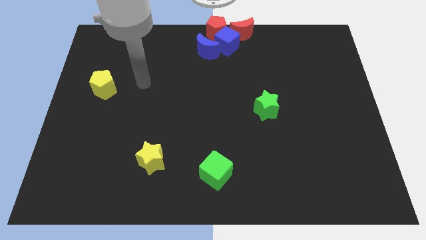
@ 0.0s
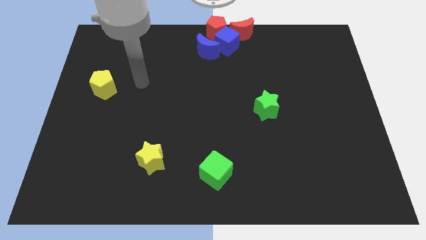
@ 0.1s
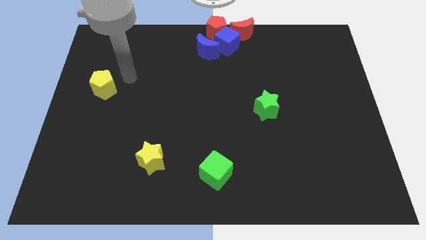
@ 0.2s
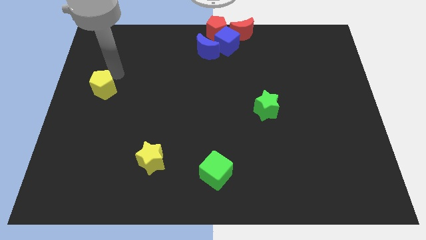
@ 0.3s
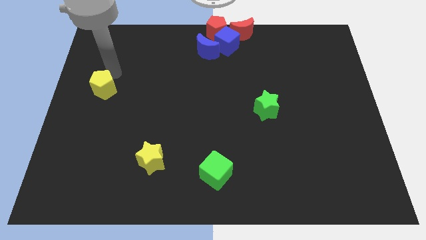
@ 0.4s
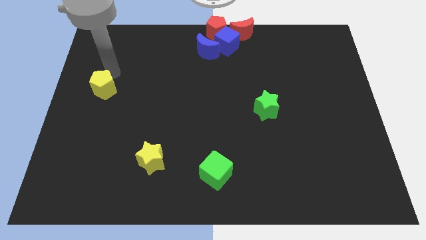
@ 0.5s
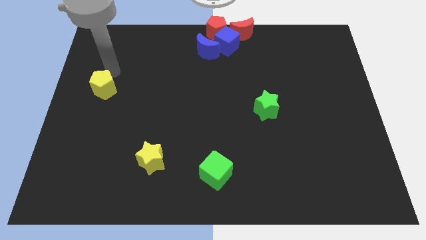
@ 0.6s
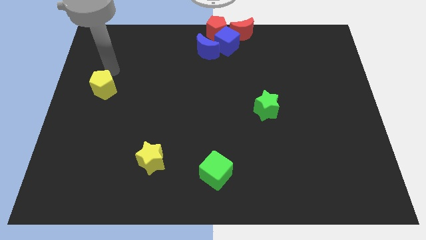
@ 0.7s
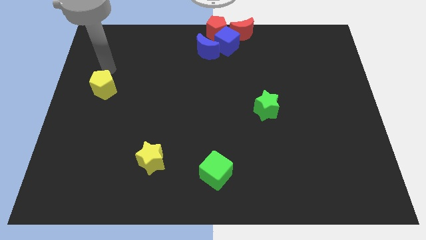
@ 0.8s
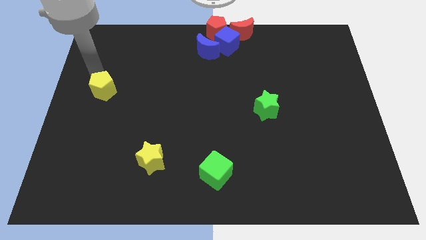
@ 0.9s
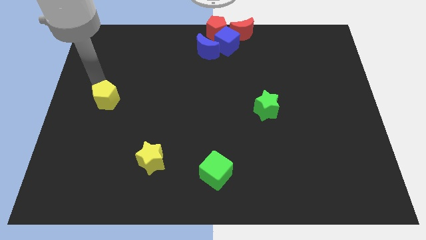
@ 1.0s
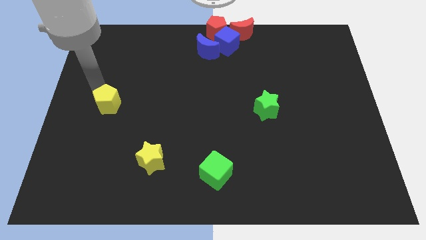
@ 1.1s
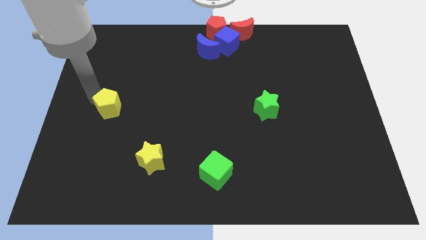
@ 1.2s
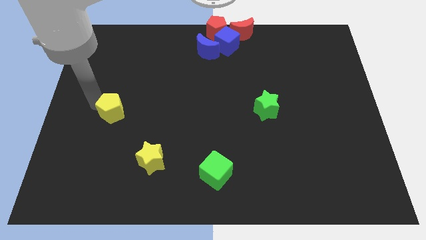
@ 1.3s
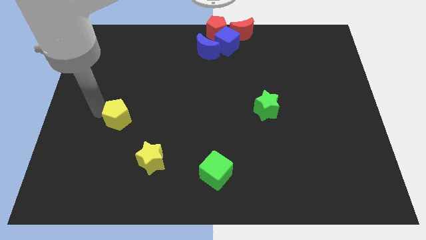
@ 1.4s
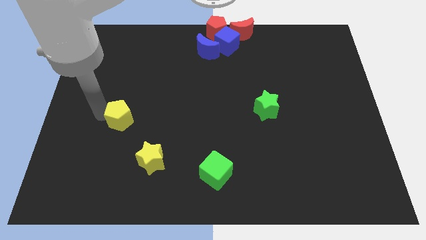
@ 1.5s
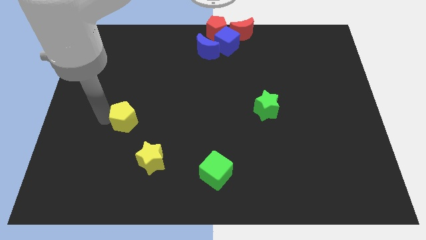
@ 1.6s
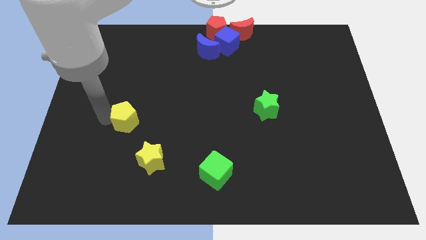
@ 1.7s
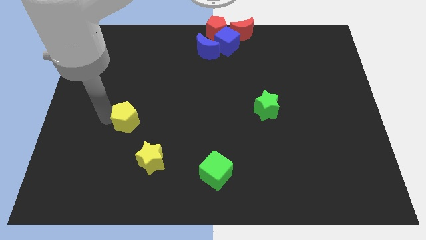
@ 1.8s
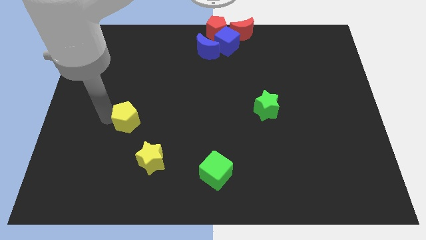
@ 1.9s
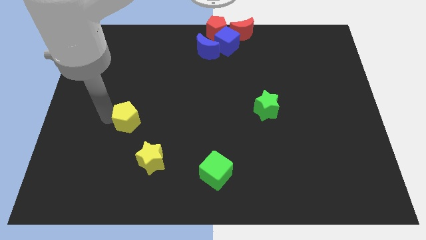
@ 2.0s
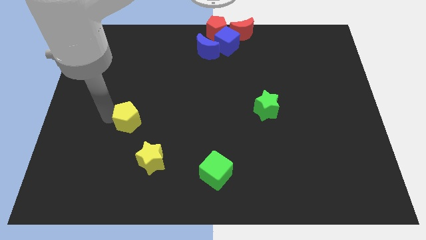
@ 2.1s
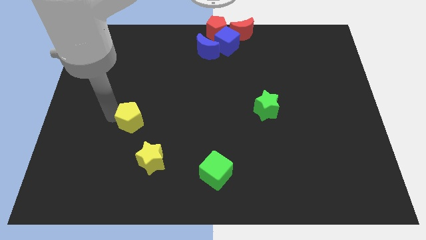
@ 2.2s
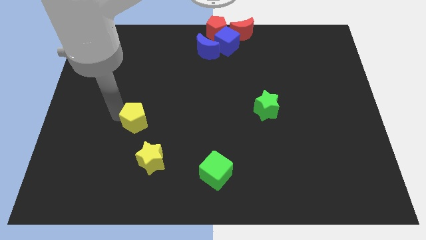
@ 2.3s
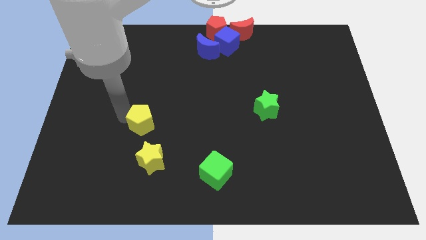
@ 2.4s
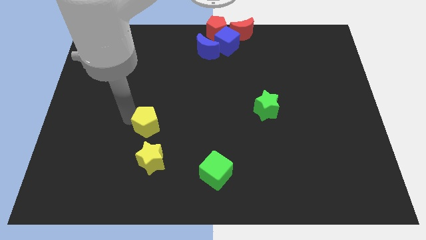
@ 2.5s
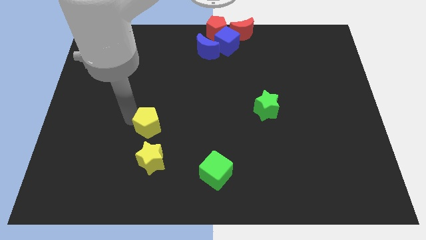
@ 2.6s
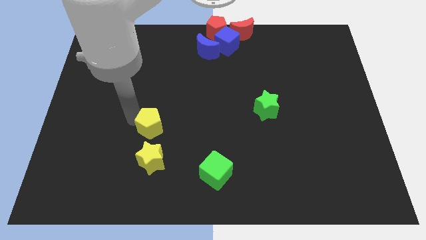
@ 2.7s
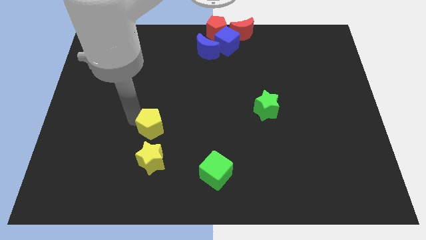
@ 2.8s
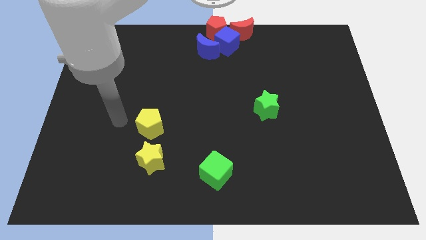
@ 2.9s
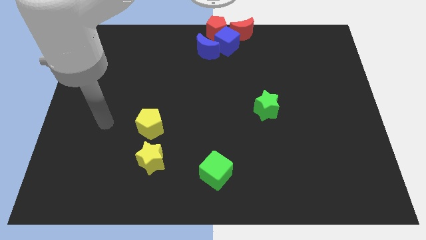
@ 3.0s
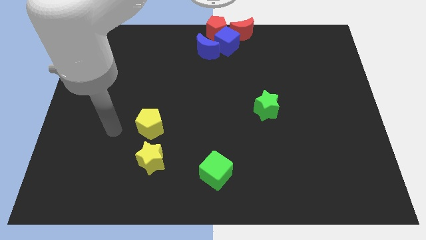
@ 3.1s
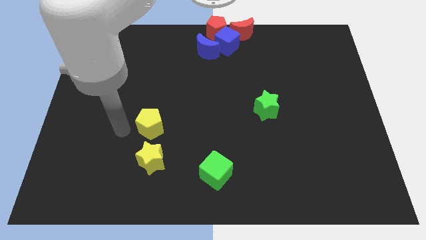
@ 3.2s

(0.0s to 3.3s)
place the yellow pentagon above the yellow star

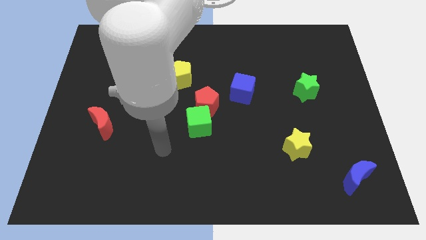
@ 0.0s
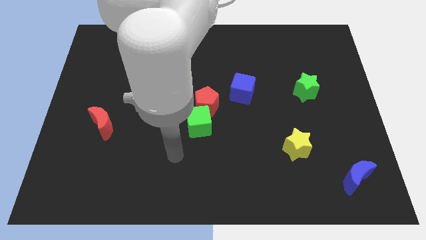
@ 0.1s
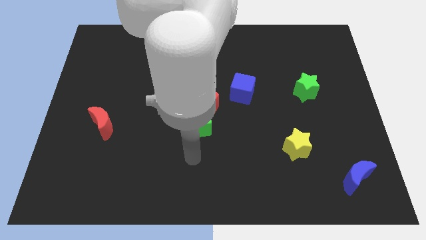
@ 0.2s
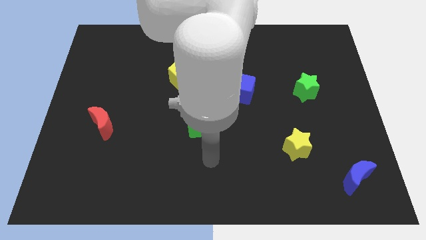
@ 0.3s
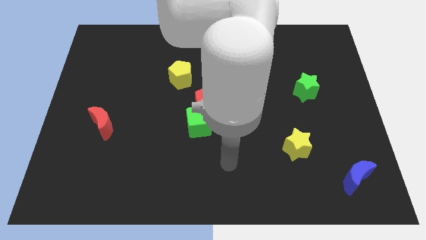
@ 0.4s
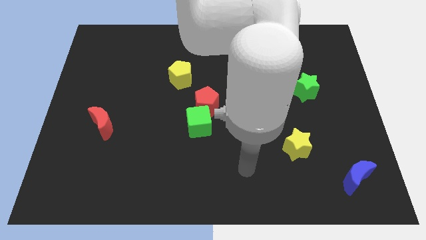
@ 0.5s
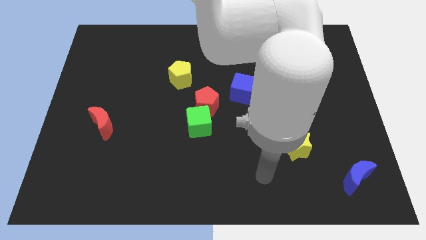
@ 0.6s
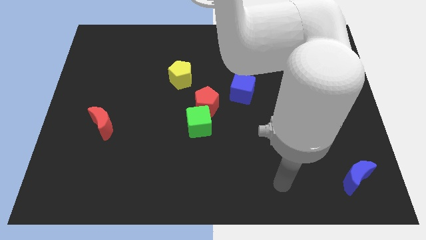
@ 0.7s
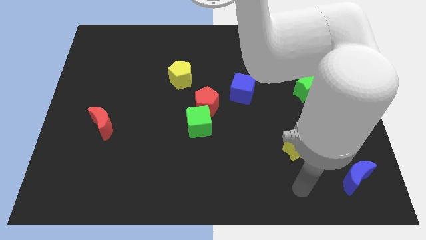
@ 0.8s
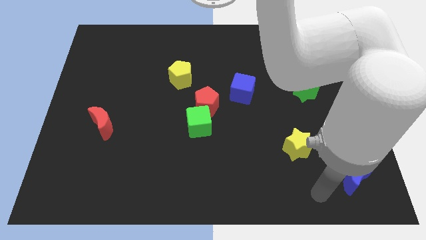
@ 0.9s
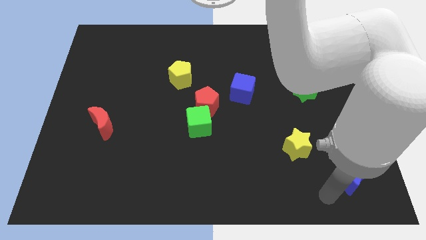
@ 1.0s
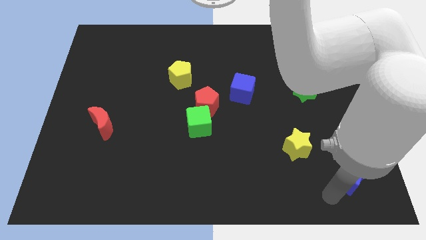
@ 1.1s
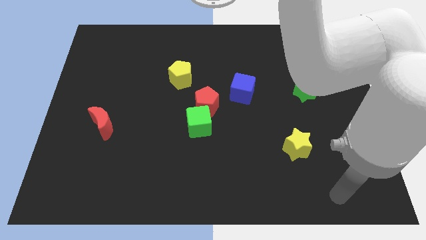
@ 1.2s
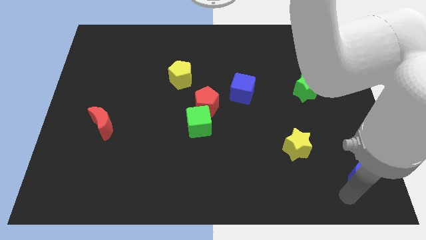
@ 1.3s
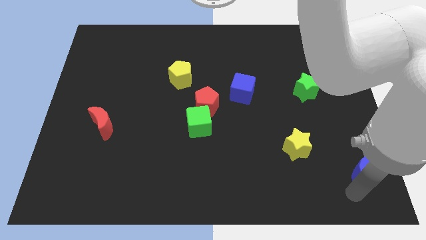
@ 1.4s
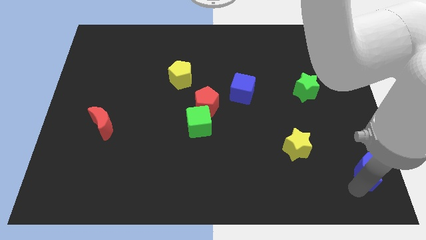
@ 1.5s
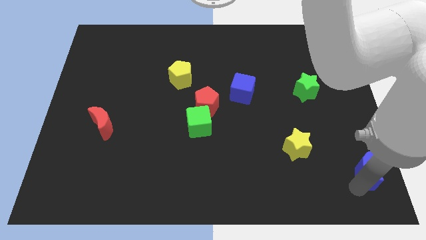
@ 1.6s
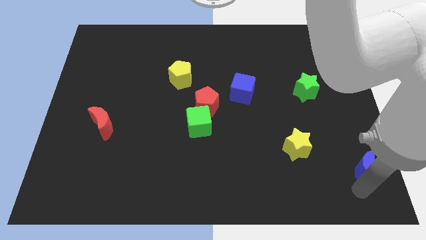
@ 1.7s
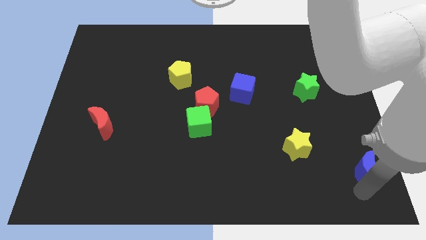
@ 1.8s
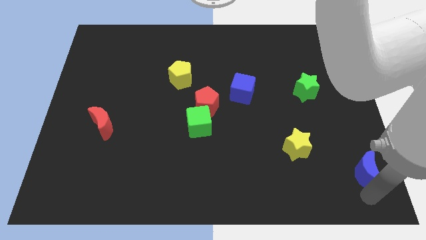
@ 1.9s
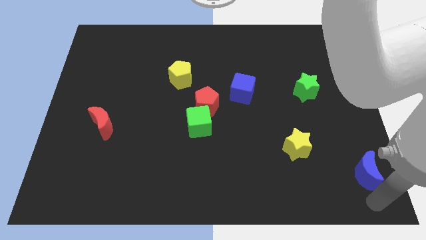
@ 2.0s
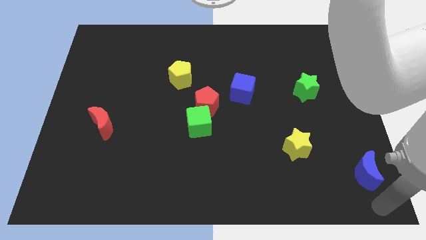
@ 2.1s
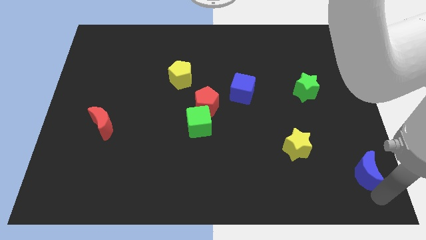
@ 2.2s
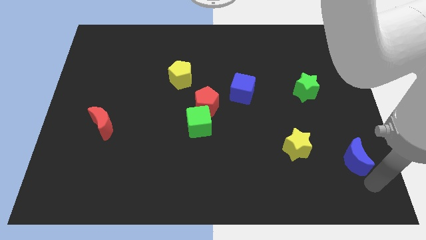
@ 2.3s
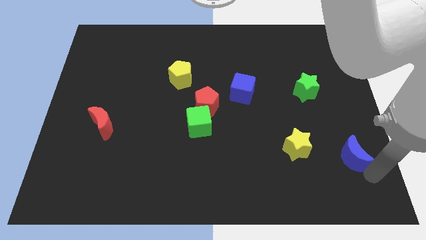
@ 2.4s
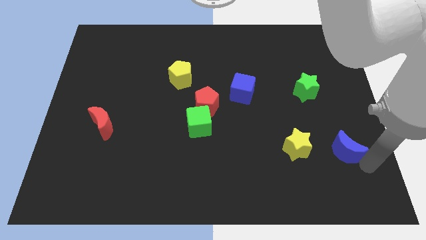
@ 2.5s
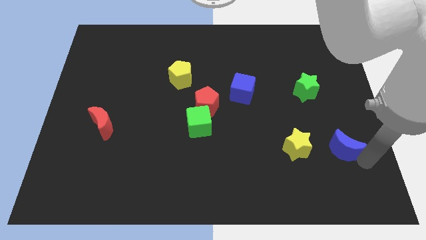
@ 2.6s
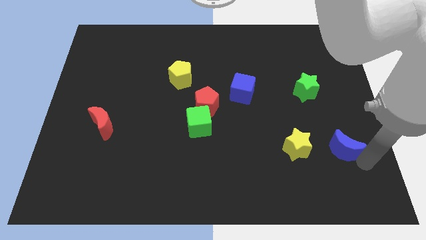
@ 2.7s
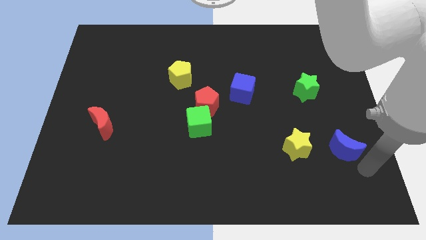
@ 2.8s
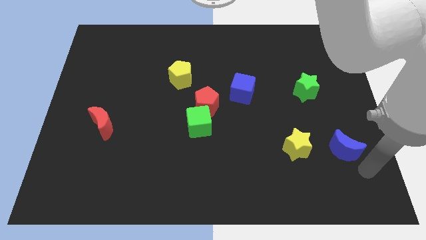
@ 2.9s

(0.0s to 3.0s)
put the blue moon at the right side of the yellow star

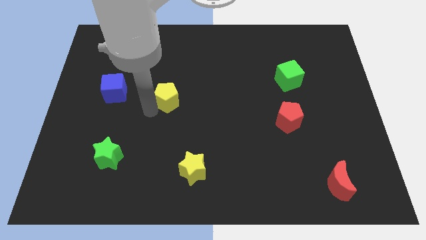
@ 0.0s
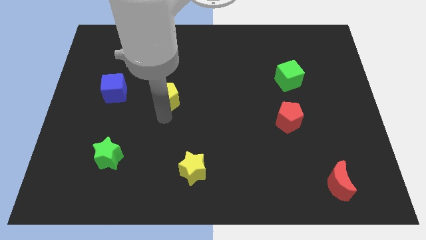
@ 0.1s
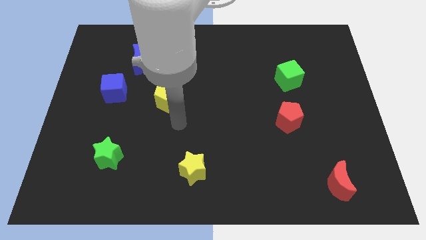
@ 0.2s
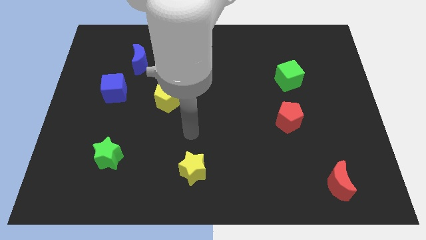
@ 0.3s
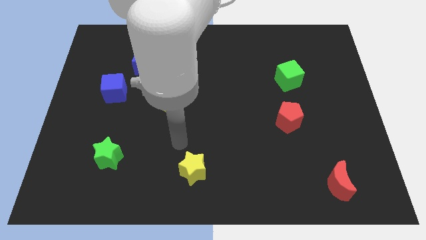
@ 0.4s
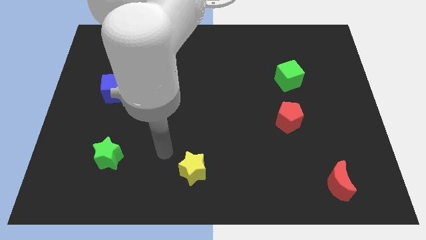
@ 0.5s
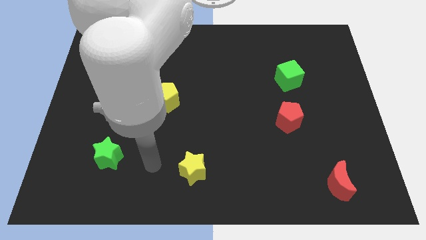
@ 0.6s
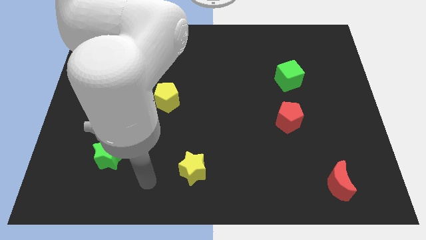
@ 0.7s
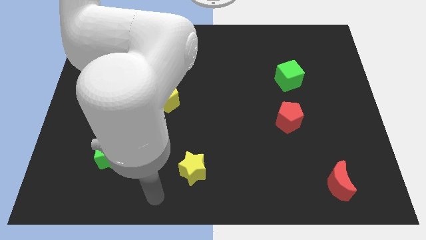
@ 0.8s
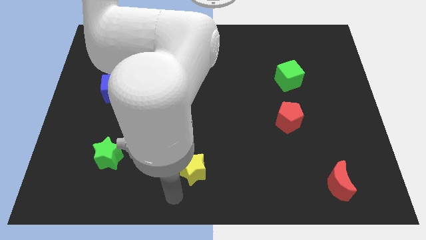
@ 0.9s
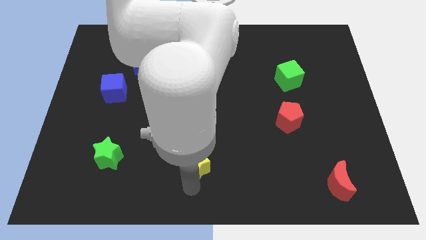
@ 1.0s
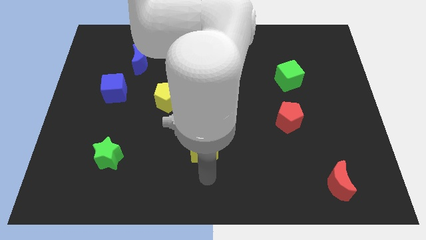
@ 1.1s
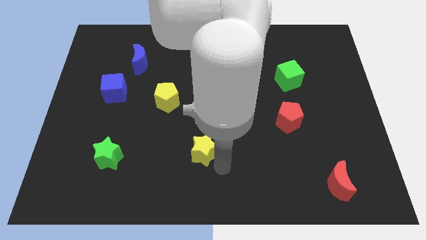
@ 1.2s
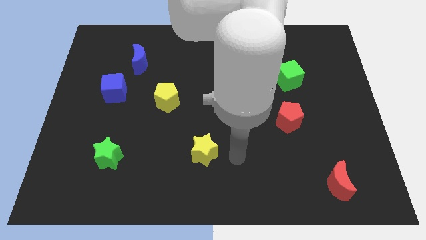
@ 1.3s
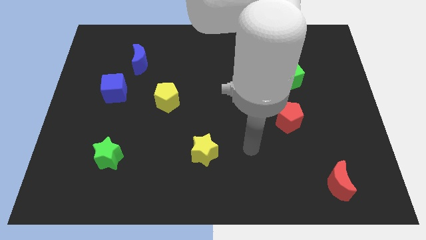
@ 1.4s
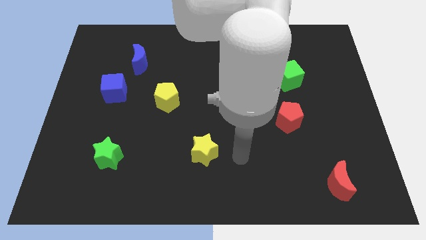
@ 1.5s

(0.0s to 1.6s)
slightly push the yellow star to the right of green star

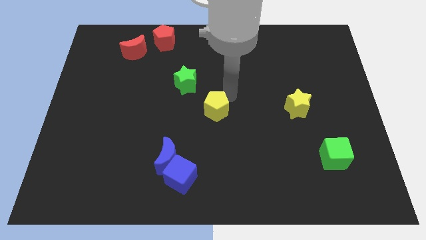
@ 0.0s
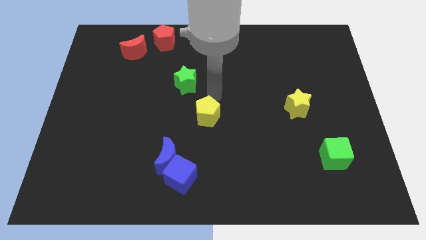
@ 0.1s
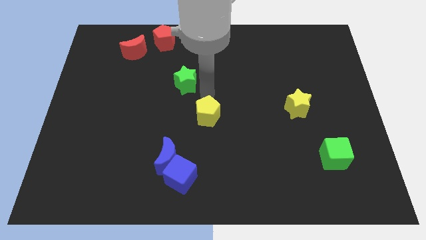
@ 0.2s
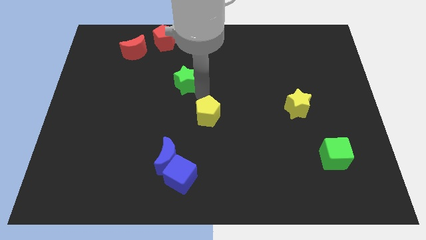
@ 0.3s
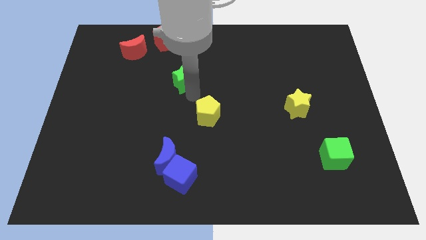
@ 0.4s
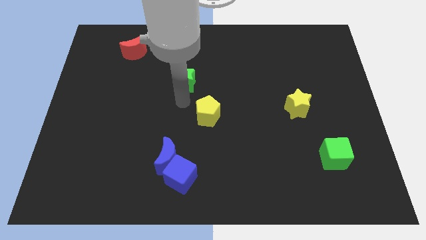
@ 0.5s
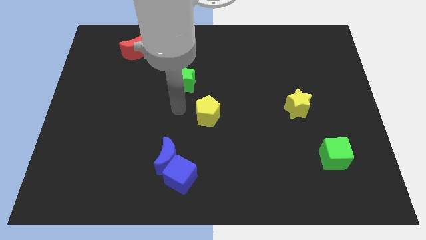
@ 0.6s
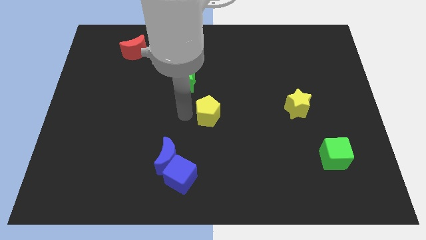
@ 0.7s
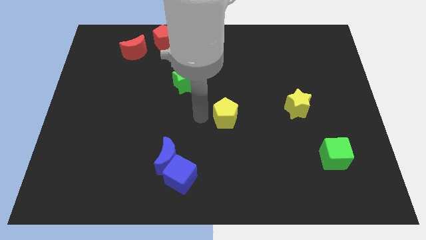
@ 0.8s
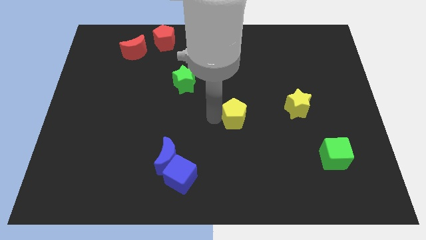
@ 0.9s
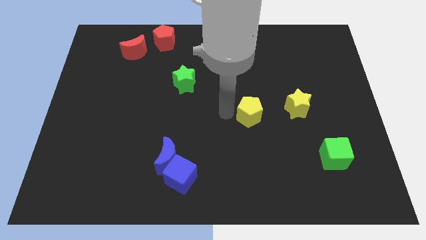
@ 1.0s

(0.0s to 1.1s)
slide yellow pentagon to the left of yellow star

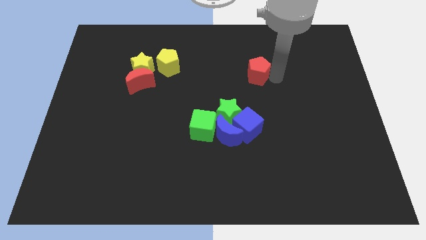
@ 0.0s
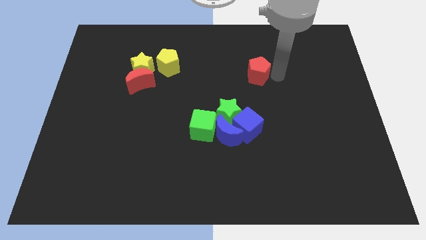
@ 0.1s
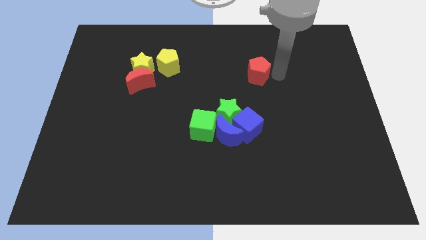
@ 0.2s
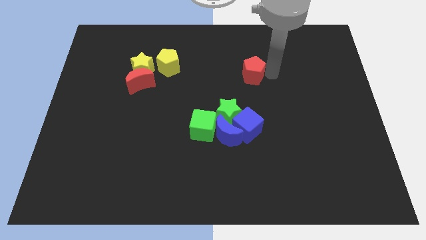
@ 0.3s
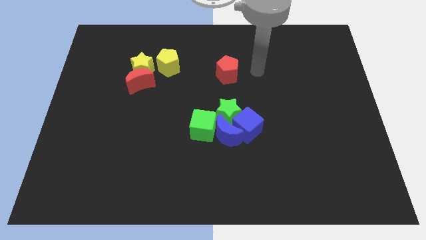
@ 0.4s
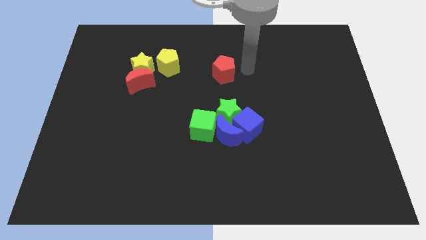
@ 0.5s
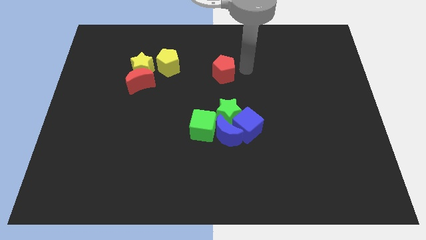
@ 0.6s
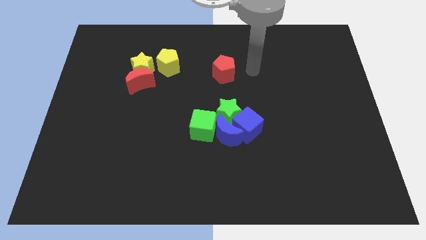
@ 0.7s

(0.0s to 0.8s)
push the red pentagon above the green star
